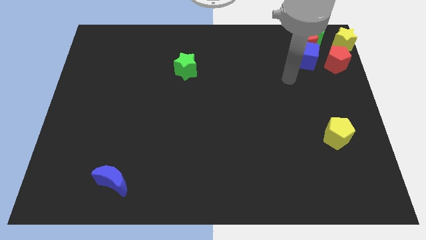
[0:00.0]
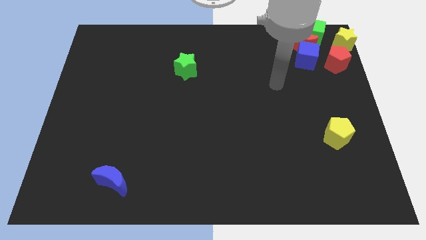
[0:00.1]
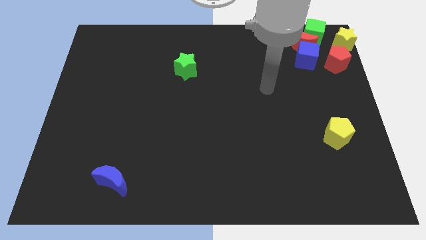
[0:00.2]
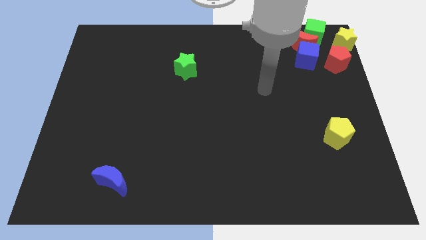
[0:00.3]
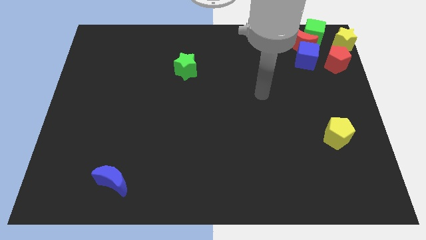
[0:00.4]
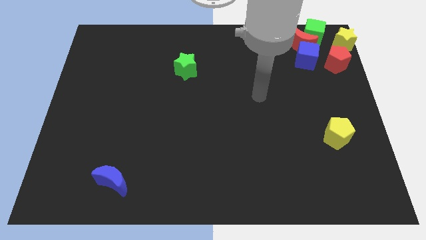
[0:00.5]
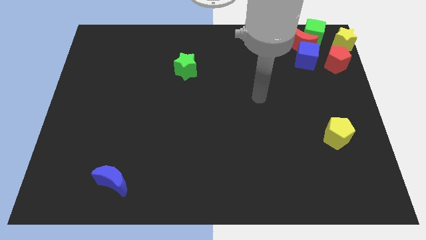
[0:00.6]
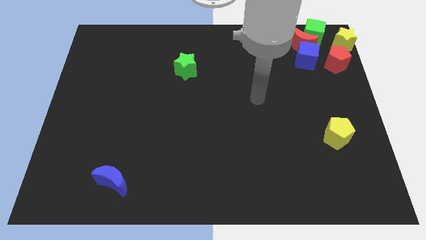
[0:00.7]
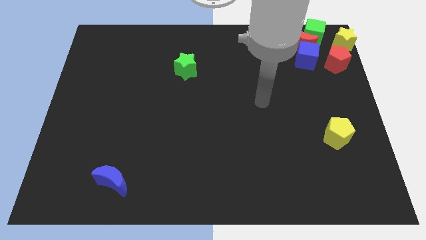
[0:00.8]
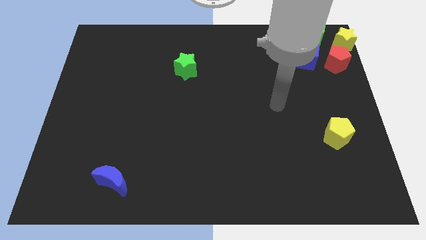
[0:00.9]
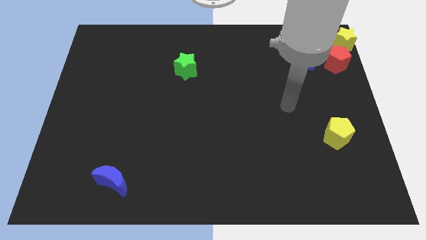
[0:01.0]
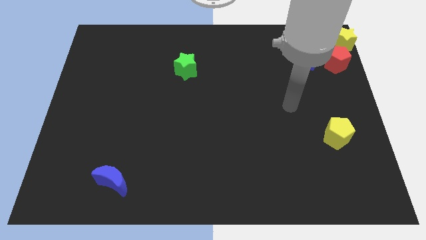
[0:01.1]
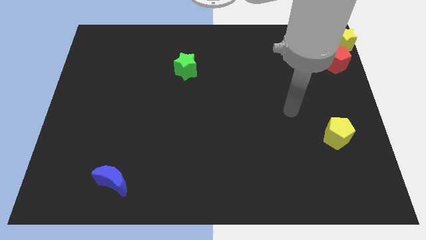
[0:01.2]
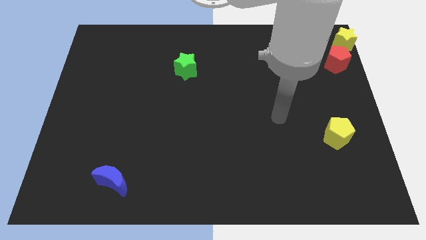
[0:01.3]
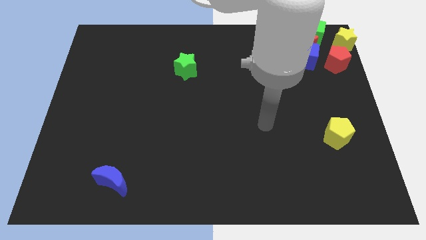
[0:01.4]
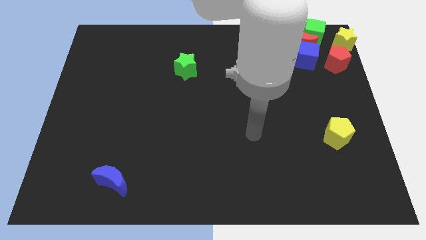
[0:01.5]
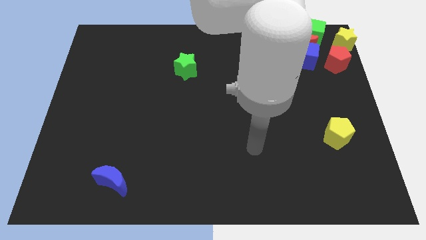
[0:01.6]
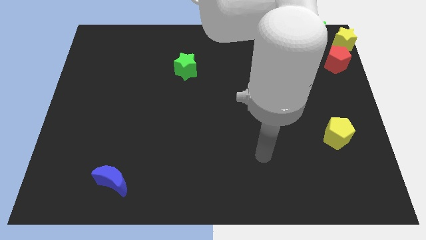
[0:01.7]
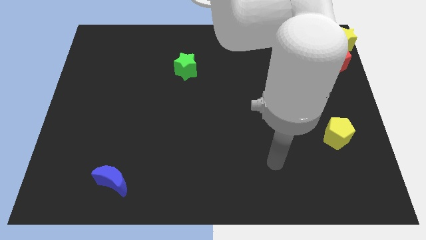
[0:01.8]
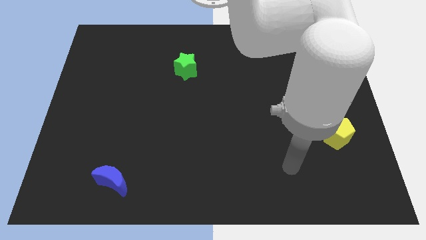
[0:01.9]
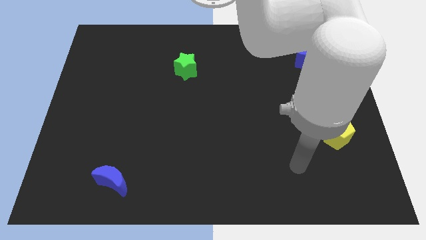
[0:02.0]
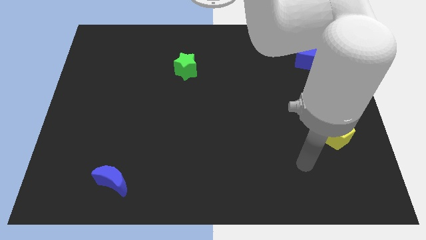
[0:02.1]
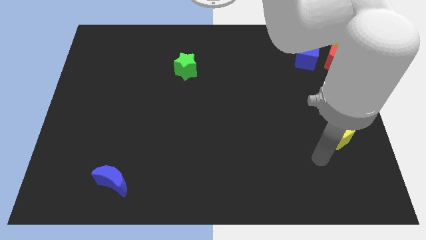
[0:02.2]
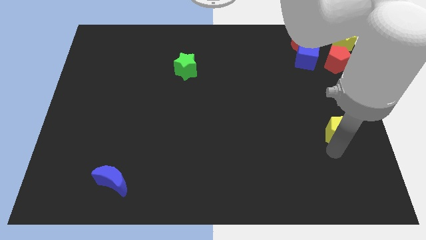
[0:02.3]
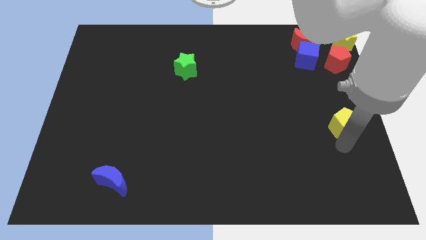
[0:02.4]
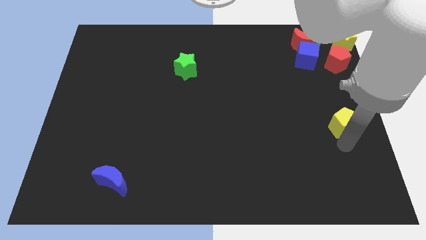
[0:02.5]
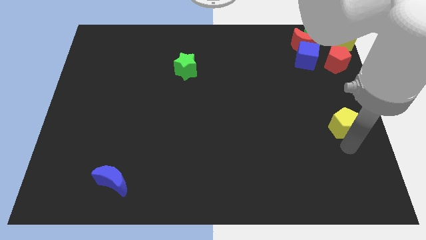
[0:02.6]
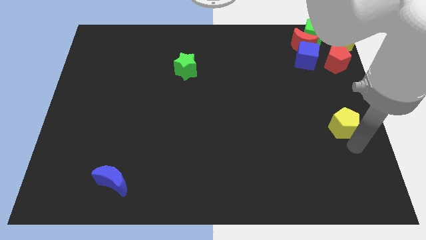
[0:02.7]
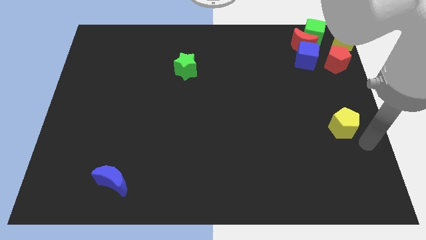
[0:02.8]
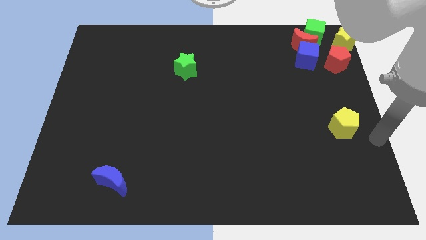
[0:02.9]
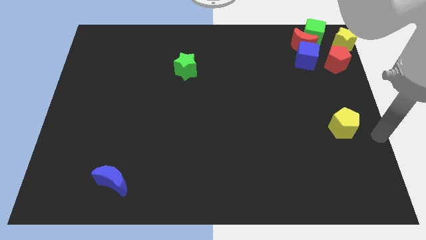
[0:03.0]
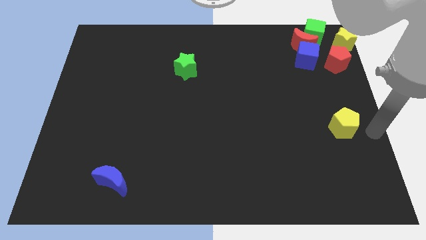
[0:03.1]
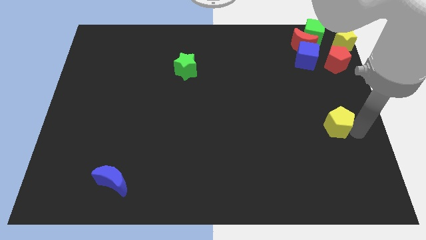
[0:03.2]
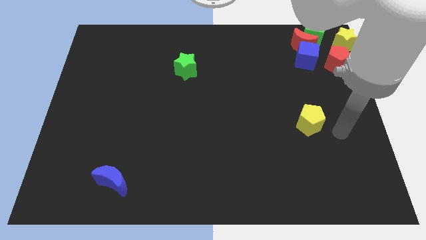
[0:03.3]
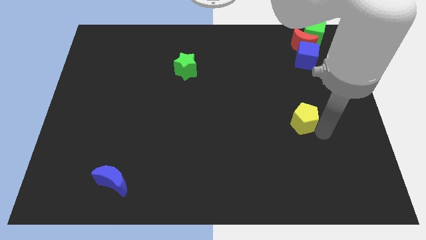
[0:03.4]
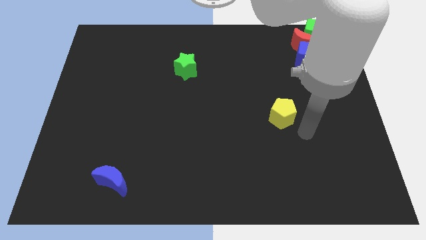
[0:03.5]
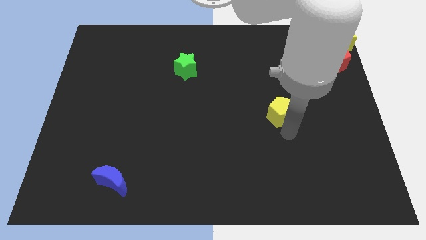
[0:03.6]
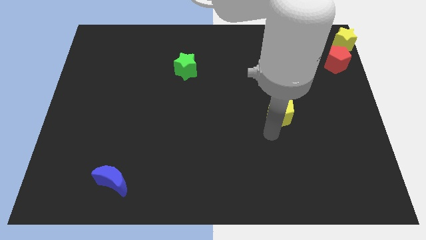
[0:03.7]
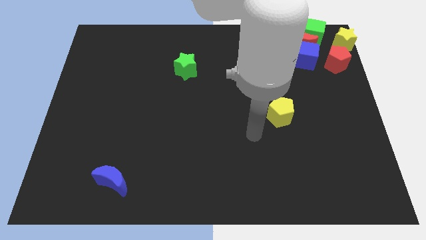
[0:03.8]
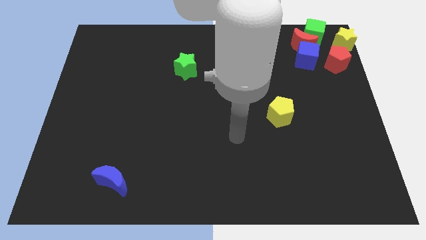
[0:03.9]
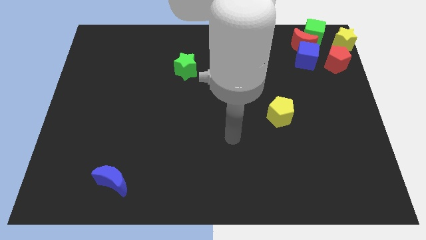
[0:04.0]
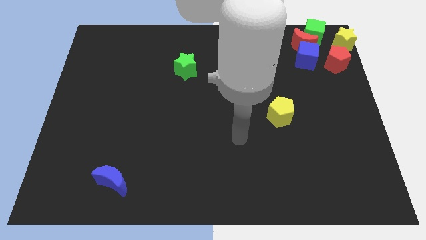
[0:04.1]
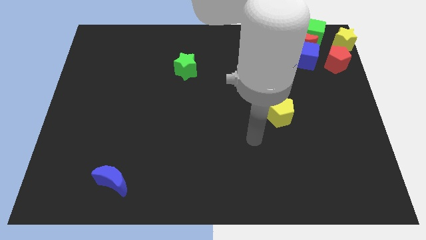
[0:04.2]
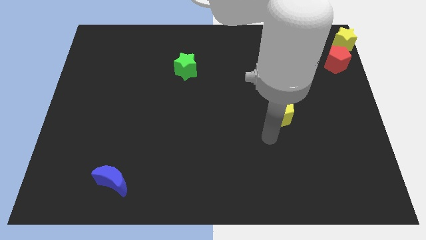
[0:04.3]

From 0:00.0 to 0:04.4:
place the yellow pentagon below the blue cube

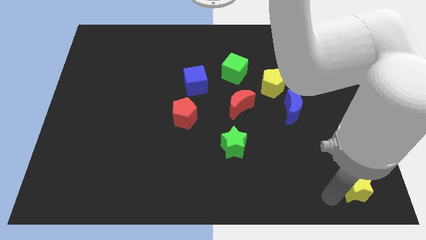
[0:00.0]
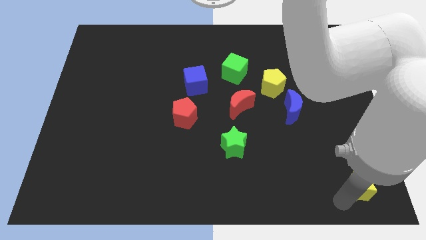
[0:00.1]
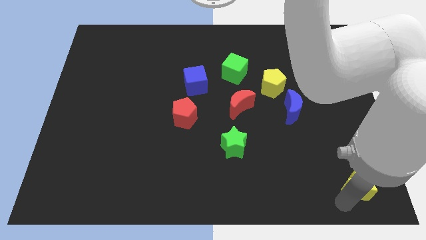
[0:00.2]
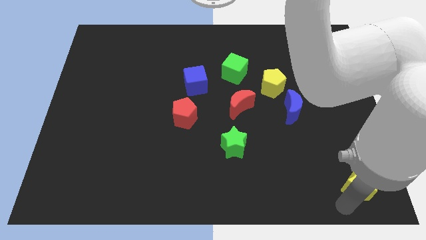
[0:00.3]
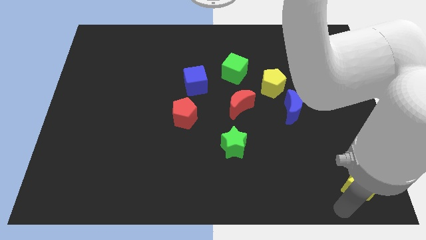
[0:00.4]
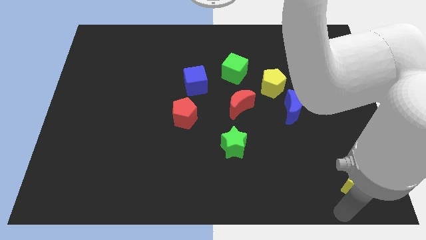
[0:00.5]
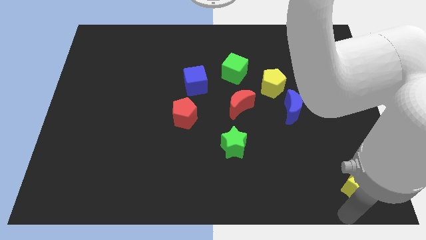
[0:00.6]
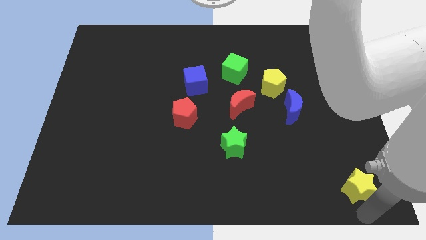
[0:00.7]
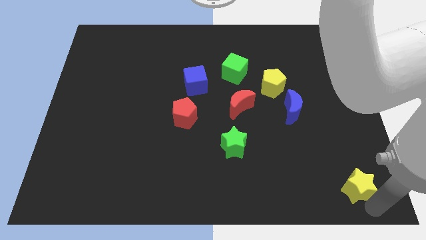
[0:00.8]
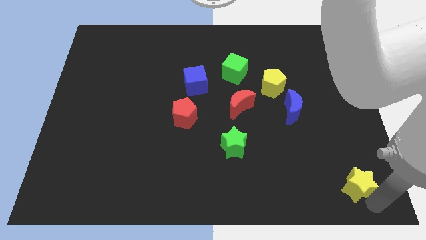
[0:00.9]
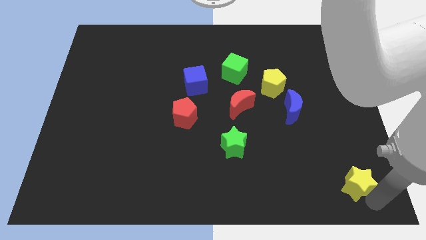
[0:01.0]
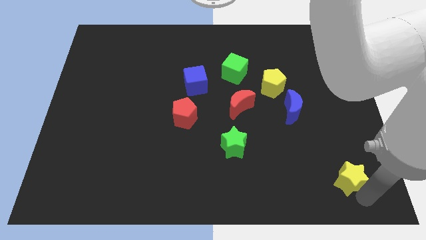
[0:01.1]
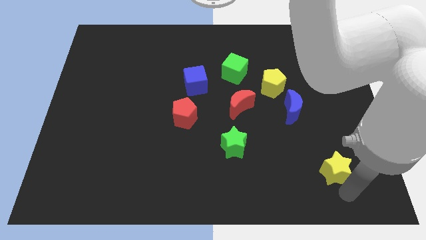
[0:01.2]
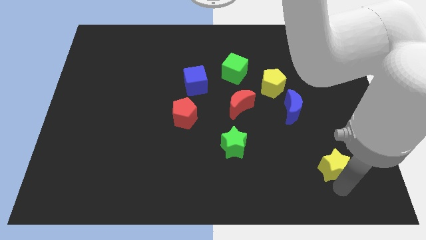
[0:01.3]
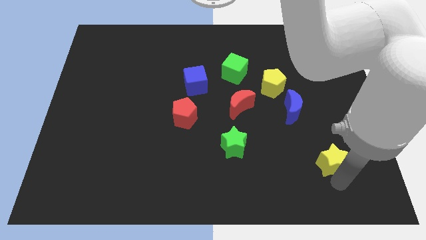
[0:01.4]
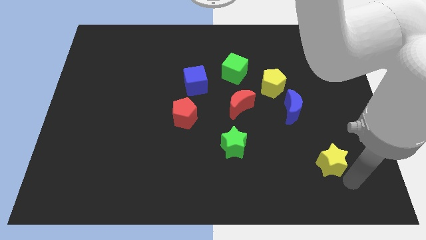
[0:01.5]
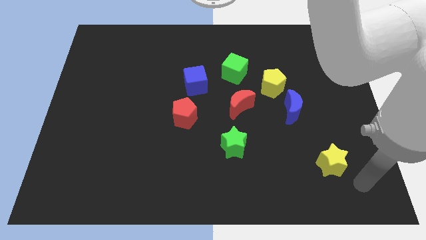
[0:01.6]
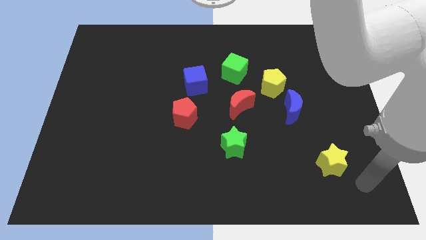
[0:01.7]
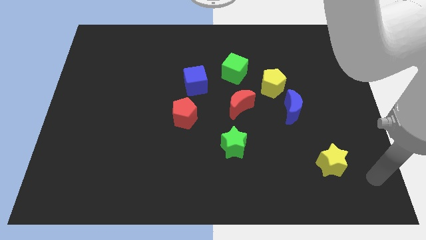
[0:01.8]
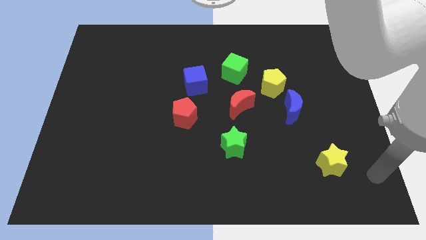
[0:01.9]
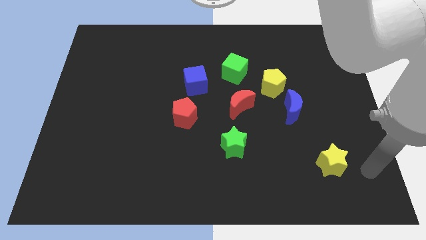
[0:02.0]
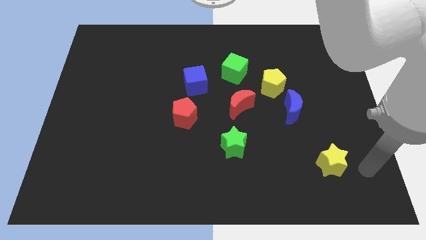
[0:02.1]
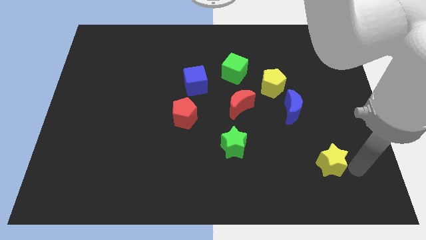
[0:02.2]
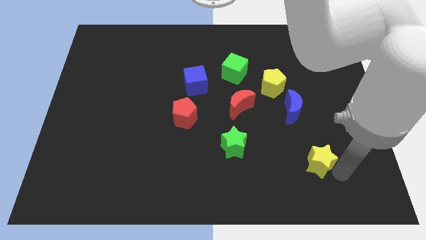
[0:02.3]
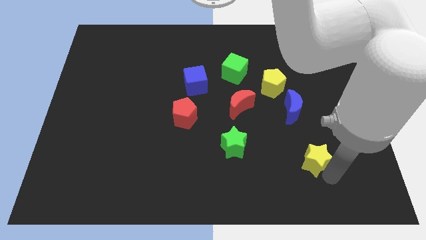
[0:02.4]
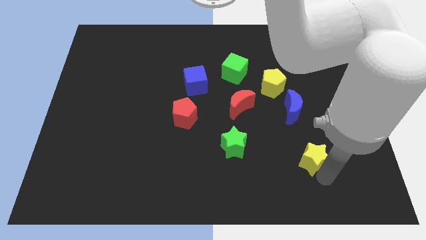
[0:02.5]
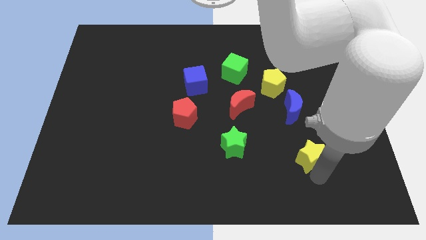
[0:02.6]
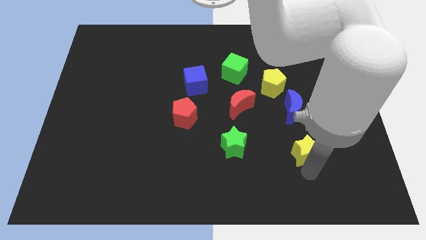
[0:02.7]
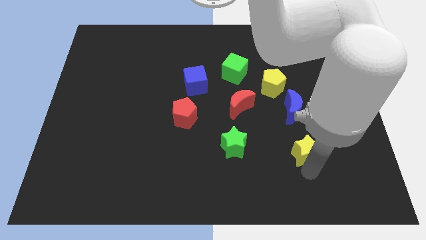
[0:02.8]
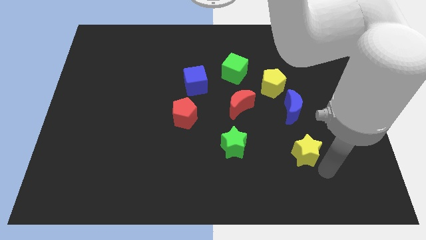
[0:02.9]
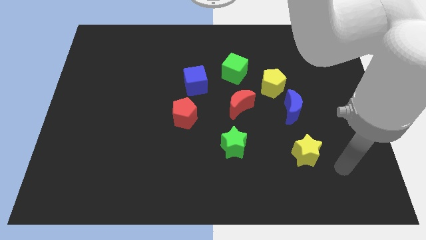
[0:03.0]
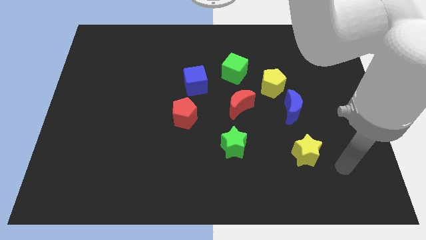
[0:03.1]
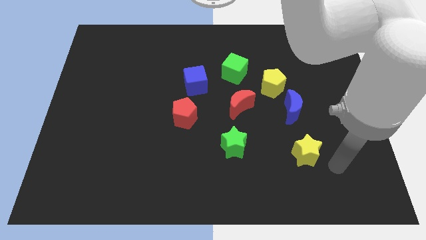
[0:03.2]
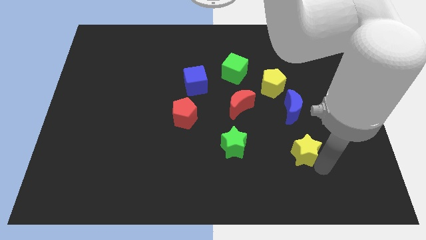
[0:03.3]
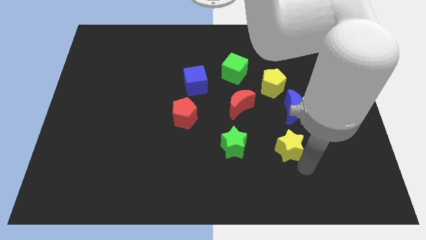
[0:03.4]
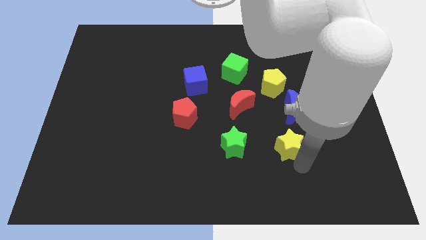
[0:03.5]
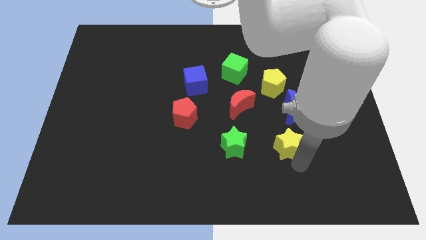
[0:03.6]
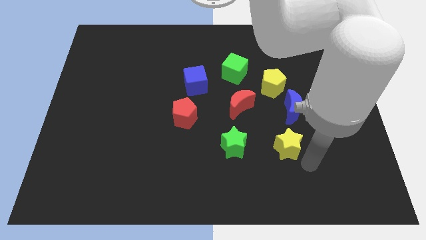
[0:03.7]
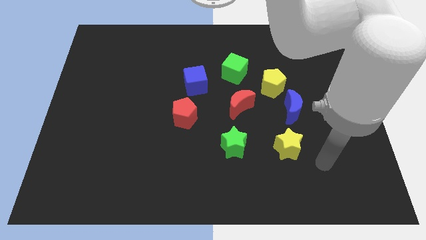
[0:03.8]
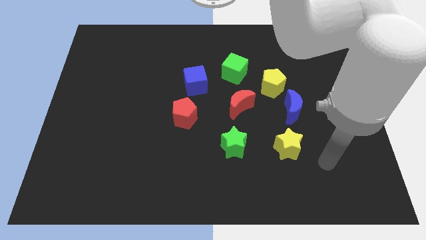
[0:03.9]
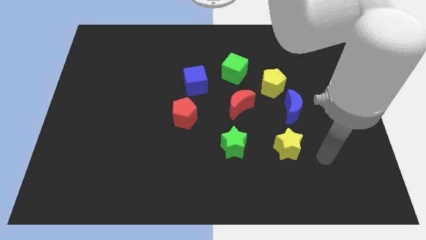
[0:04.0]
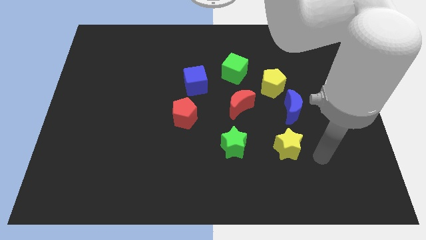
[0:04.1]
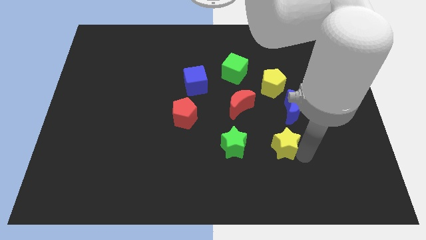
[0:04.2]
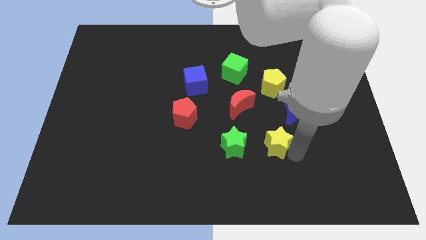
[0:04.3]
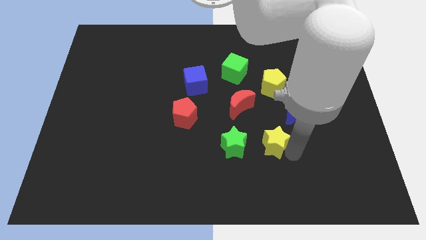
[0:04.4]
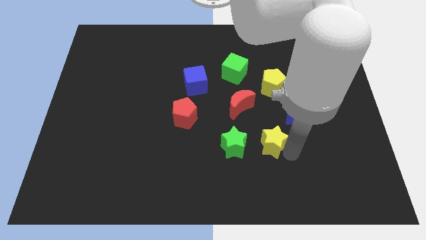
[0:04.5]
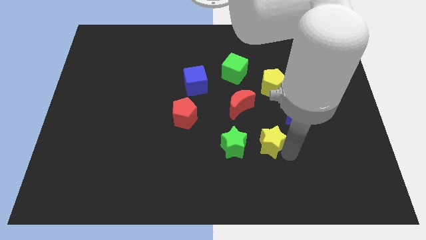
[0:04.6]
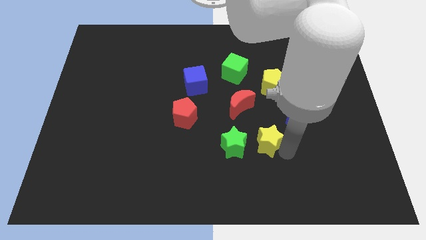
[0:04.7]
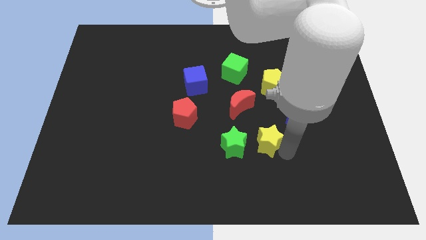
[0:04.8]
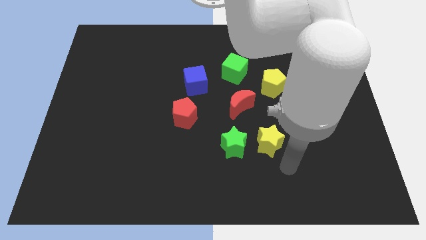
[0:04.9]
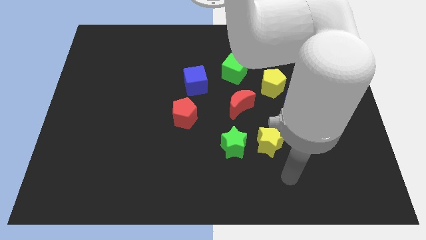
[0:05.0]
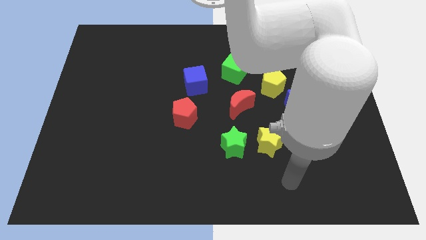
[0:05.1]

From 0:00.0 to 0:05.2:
move the yellow star parallel below to the yellow pentagon
